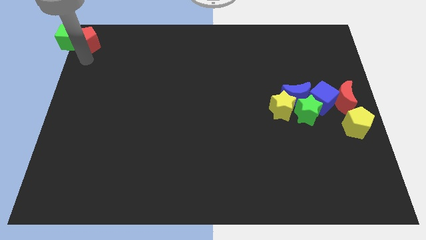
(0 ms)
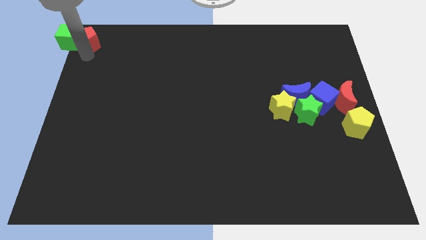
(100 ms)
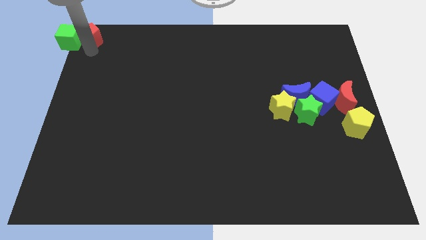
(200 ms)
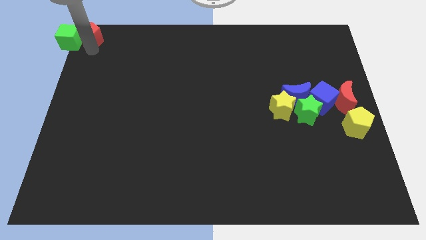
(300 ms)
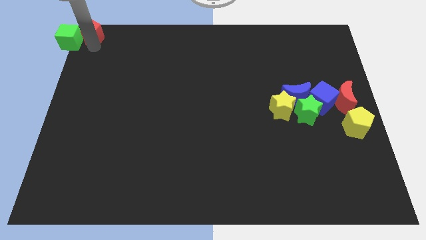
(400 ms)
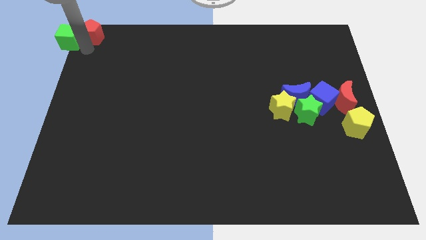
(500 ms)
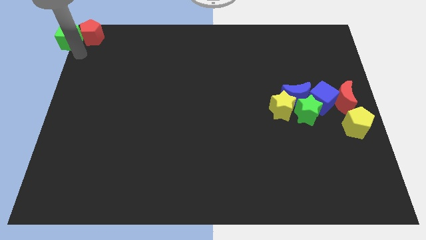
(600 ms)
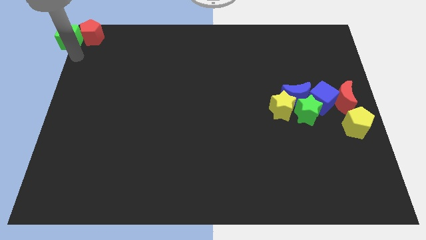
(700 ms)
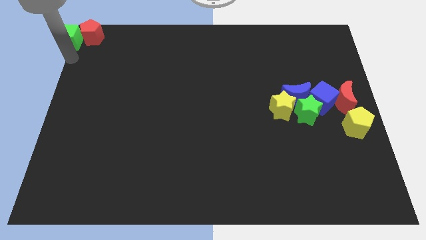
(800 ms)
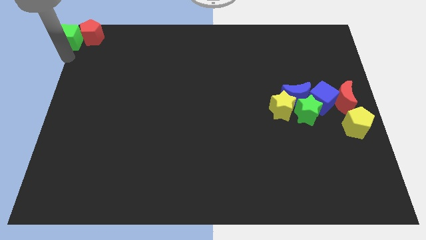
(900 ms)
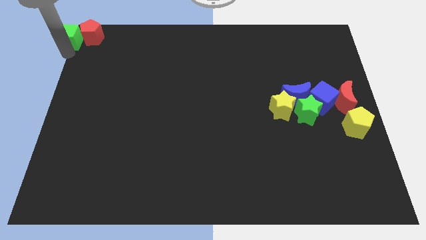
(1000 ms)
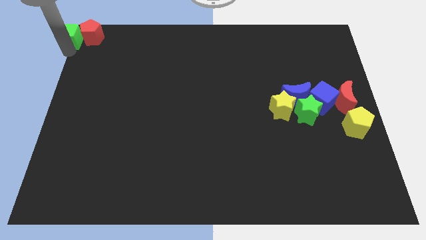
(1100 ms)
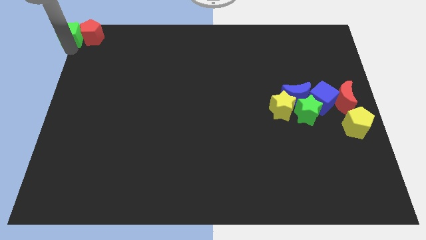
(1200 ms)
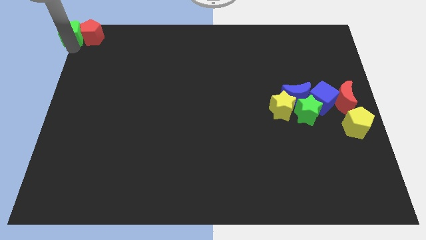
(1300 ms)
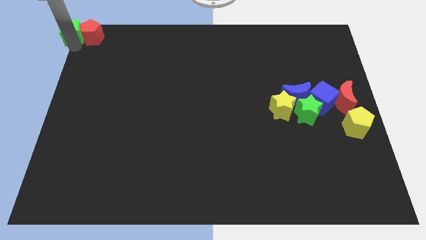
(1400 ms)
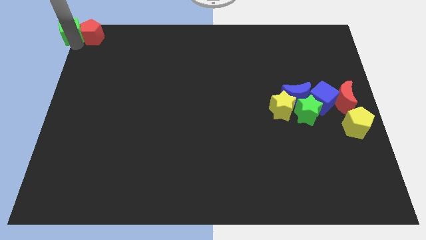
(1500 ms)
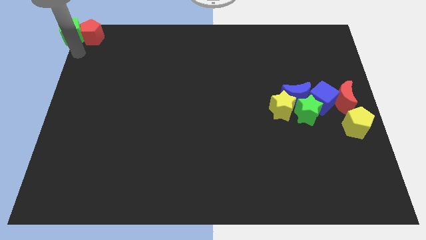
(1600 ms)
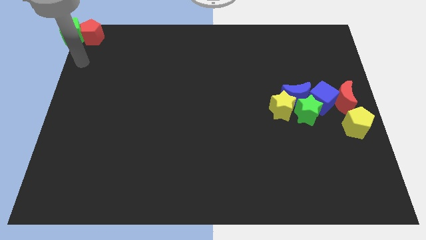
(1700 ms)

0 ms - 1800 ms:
push the red pentagon and green cube to the top left corner

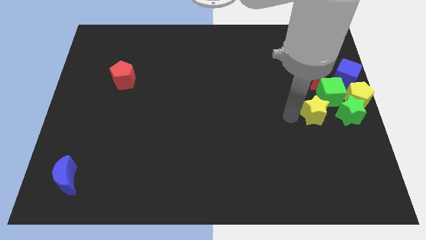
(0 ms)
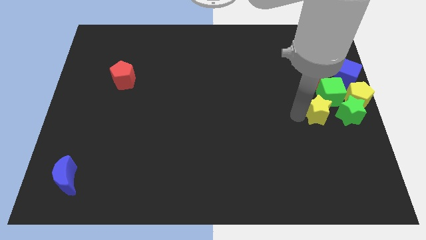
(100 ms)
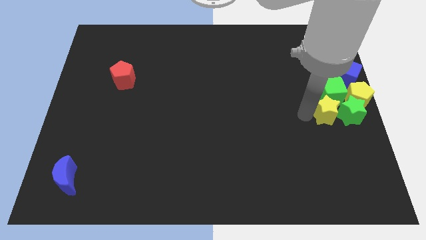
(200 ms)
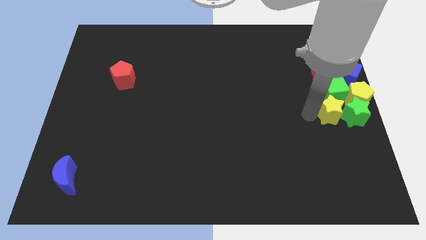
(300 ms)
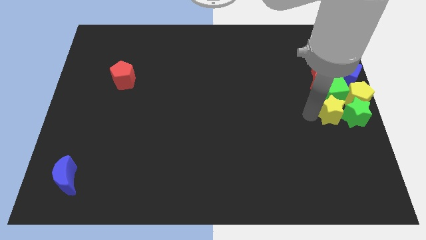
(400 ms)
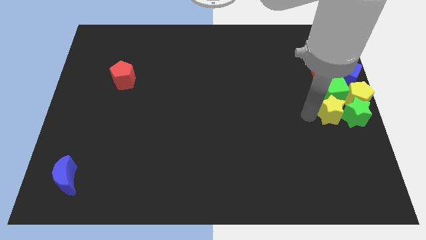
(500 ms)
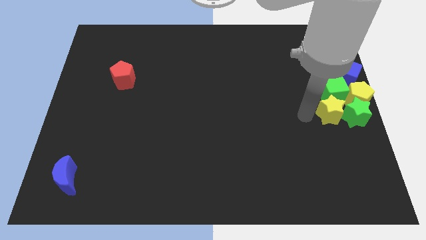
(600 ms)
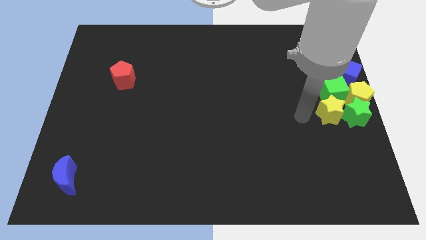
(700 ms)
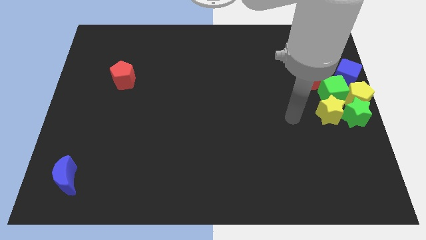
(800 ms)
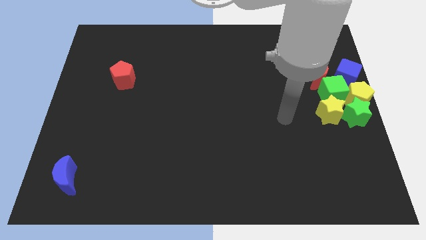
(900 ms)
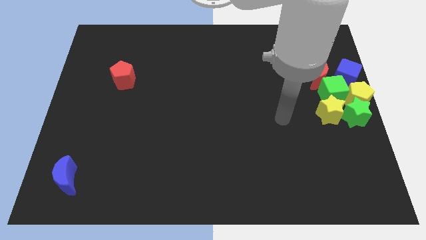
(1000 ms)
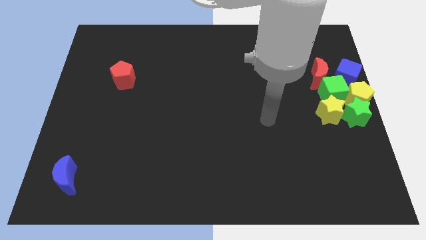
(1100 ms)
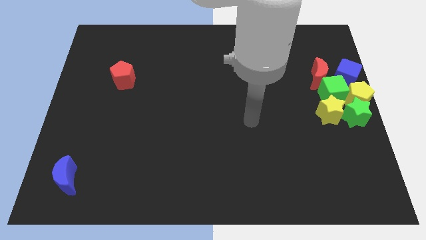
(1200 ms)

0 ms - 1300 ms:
push the yellow star towards the green star

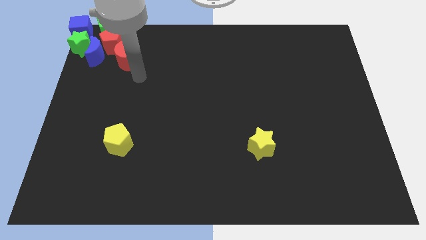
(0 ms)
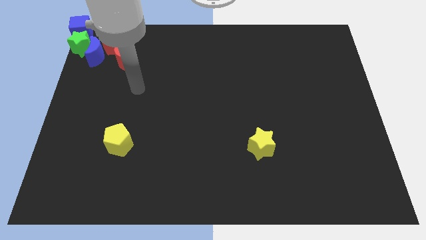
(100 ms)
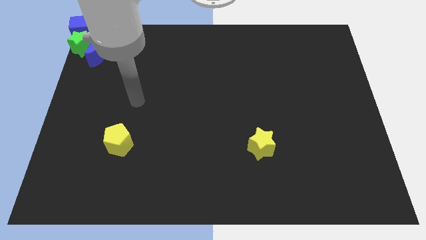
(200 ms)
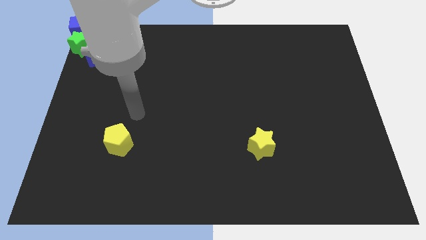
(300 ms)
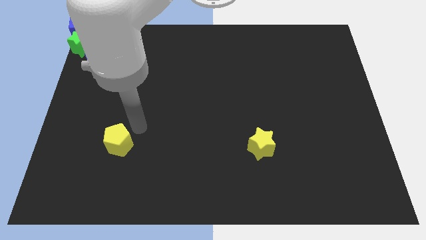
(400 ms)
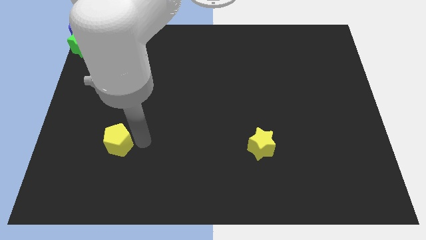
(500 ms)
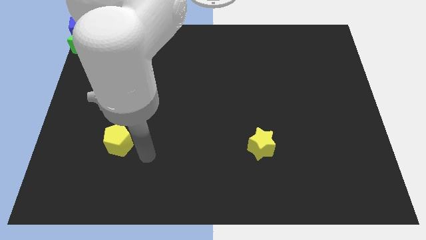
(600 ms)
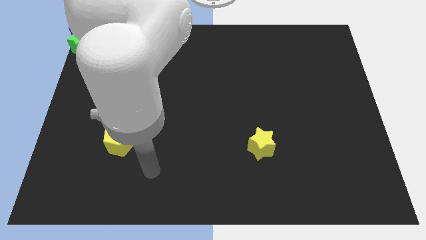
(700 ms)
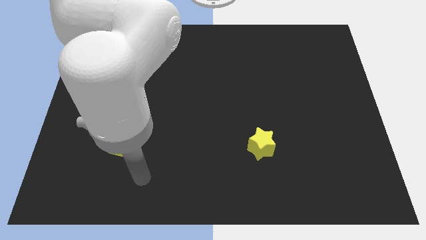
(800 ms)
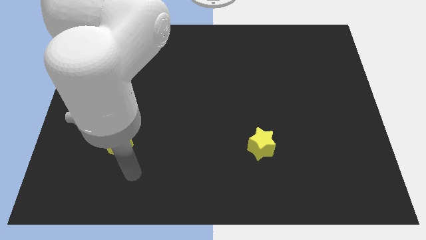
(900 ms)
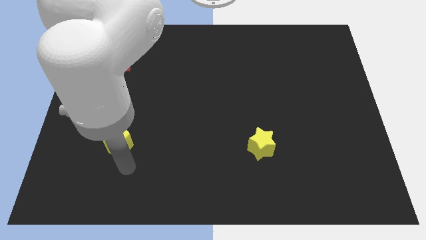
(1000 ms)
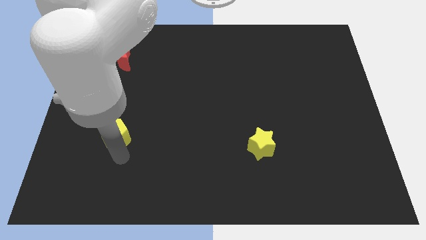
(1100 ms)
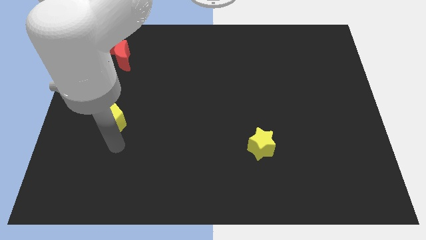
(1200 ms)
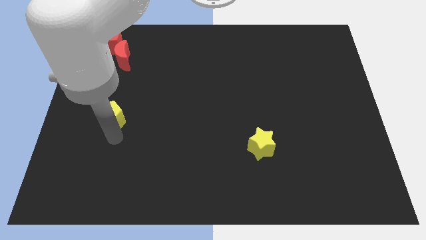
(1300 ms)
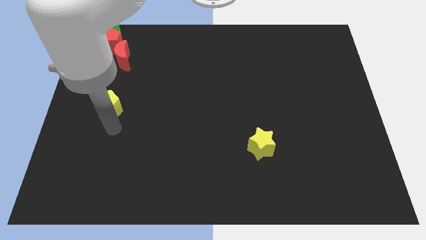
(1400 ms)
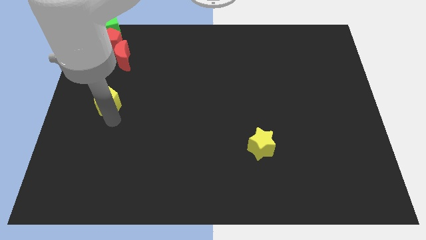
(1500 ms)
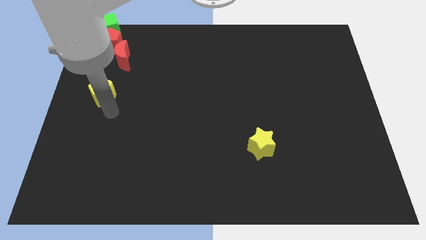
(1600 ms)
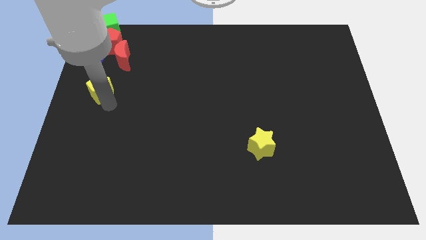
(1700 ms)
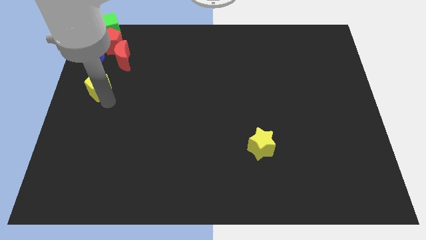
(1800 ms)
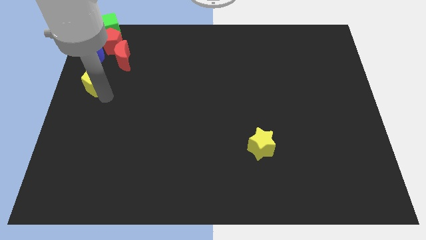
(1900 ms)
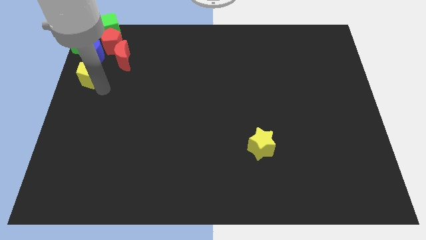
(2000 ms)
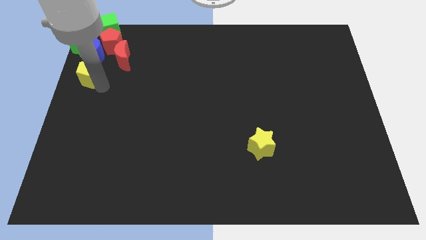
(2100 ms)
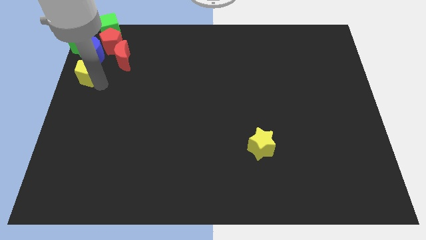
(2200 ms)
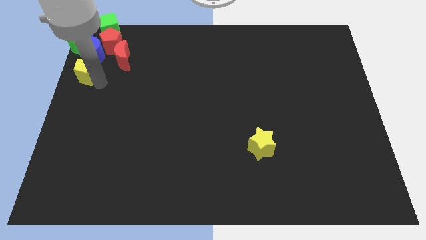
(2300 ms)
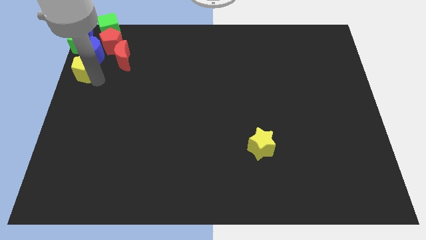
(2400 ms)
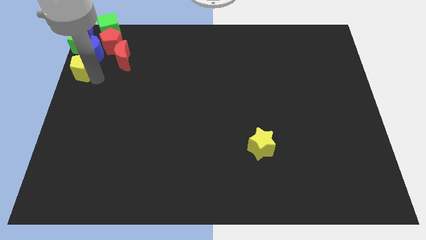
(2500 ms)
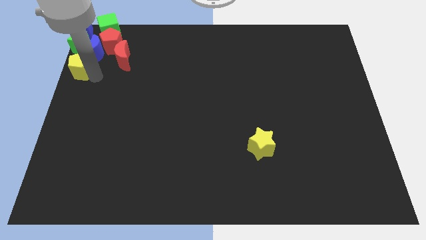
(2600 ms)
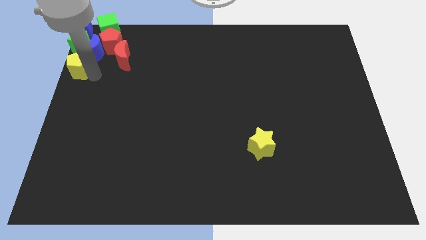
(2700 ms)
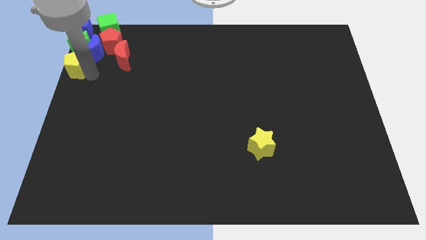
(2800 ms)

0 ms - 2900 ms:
push the yellow pentagon into a group of blocks

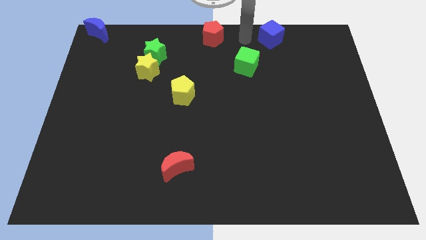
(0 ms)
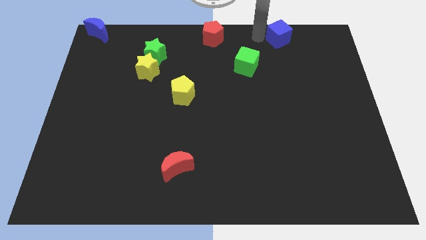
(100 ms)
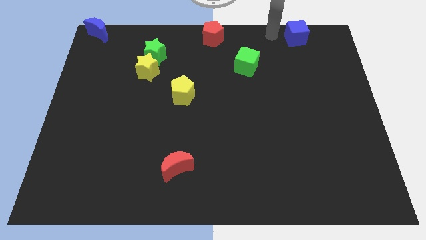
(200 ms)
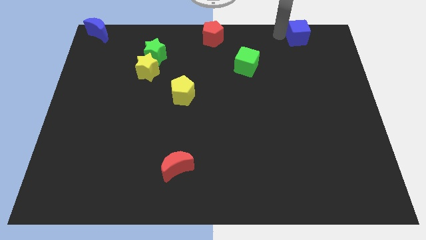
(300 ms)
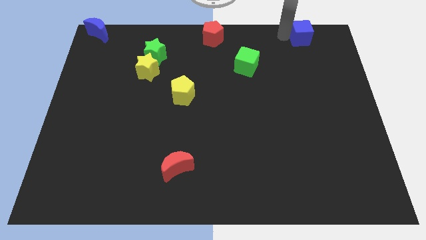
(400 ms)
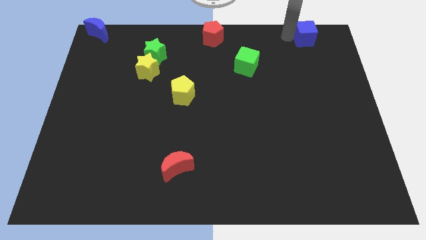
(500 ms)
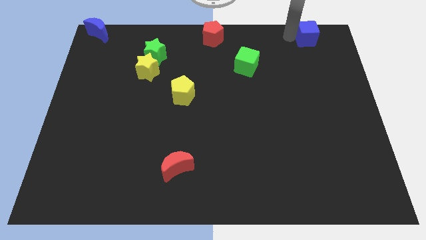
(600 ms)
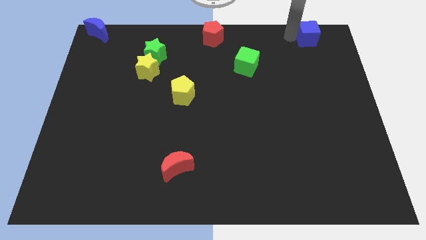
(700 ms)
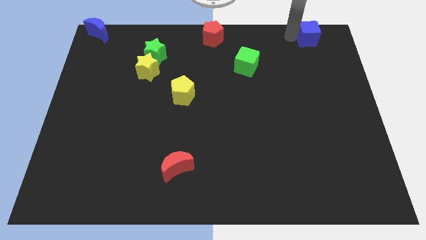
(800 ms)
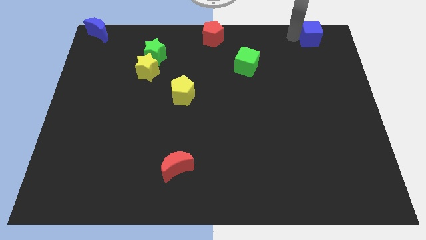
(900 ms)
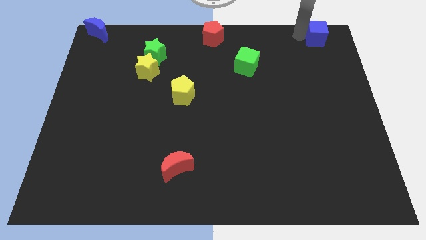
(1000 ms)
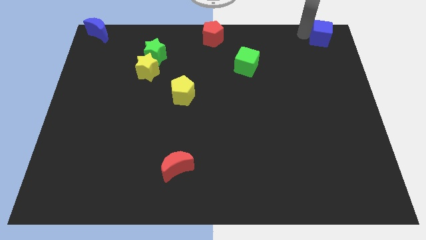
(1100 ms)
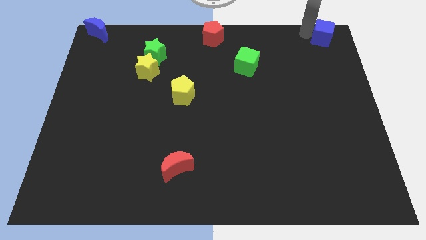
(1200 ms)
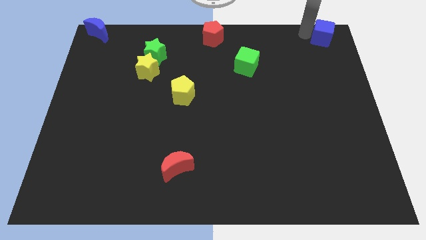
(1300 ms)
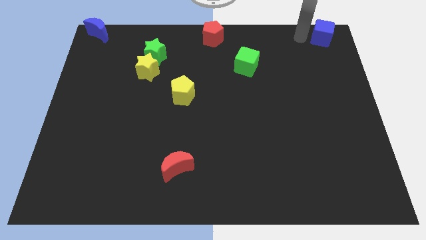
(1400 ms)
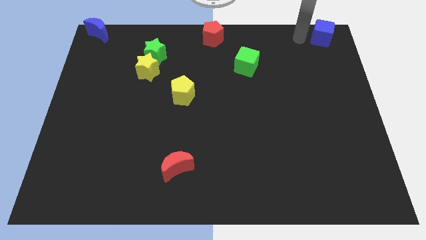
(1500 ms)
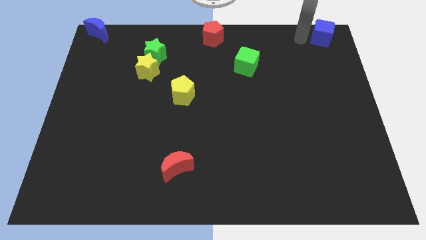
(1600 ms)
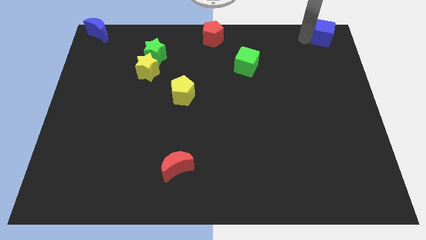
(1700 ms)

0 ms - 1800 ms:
slightly move the blue cube towards the top right of the board

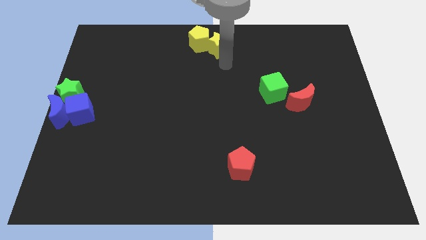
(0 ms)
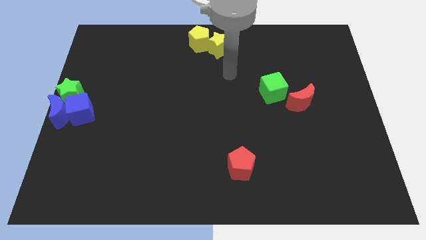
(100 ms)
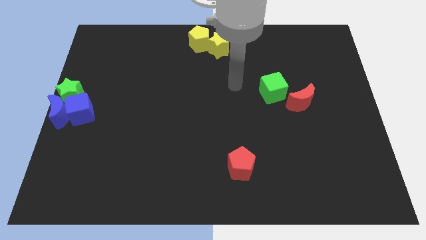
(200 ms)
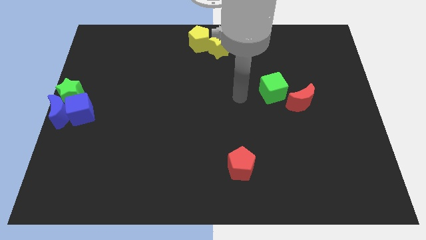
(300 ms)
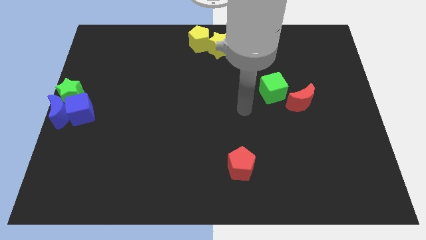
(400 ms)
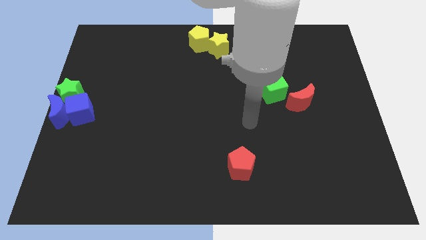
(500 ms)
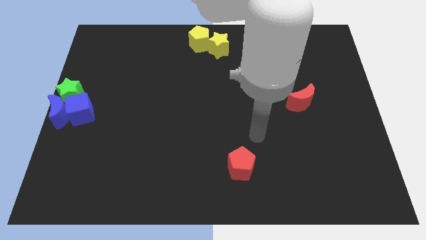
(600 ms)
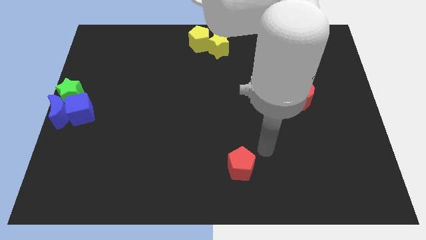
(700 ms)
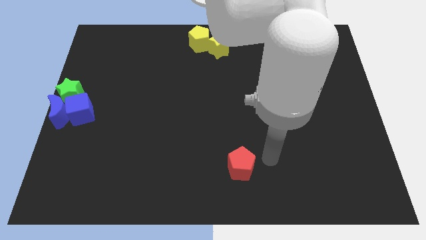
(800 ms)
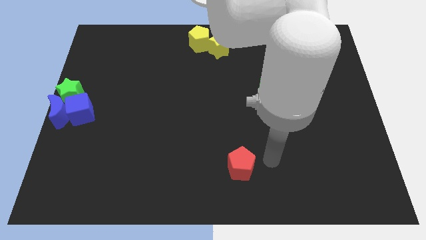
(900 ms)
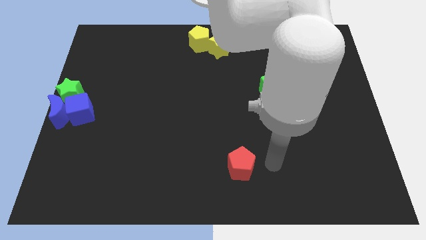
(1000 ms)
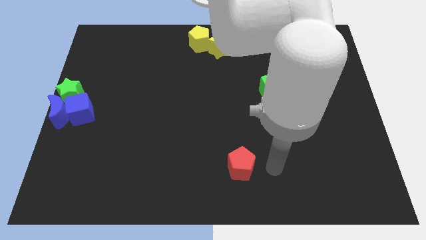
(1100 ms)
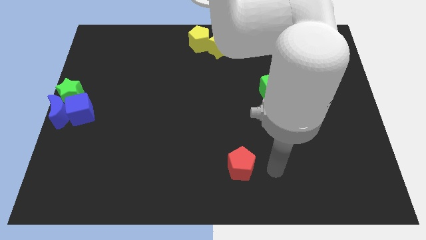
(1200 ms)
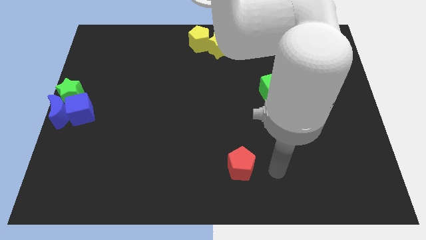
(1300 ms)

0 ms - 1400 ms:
point the arm to the right of the red pentagon
